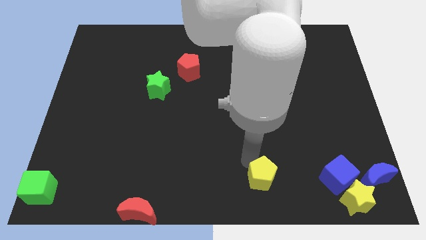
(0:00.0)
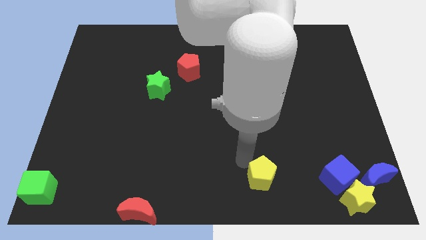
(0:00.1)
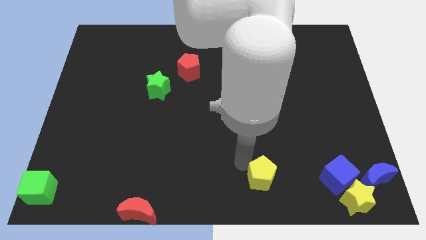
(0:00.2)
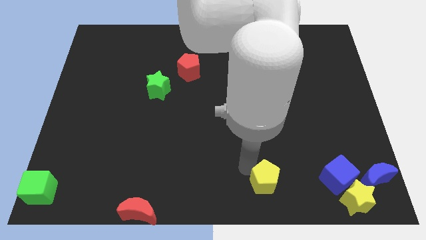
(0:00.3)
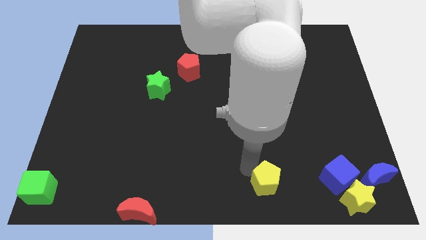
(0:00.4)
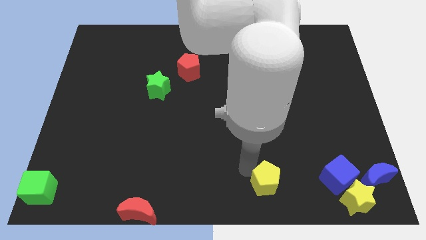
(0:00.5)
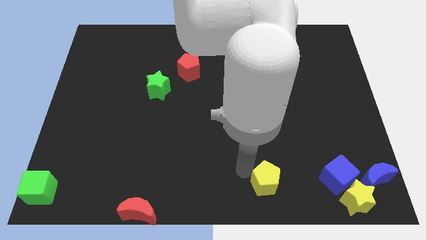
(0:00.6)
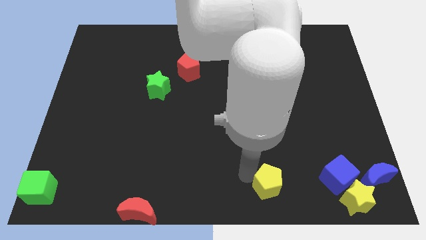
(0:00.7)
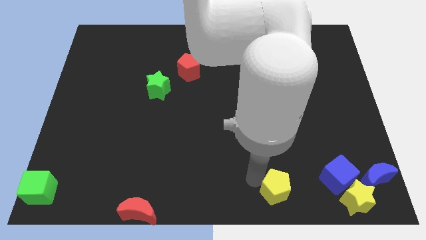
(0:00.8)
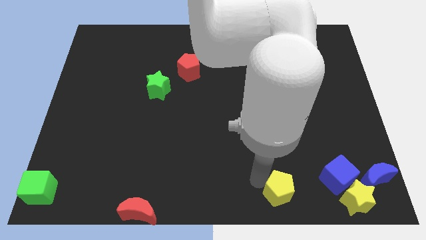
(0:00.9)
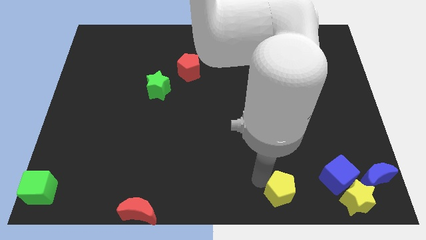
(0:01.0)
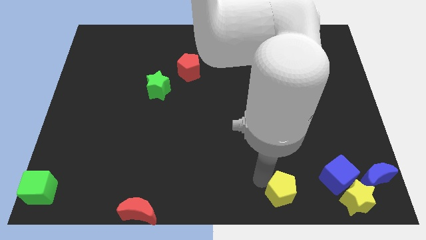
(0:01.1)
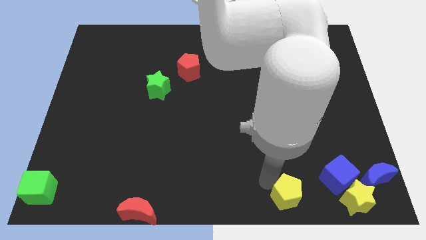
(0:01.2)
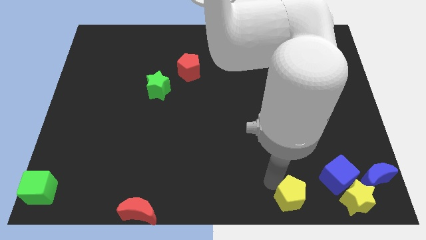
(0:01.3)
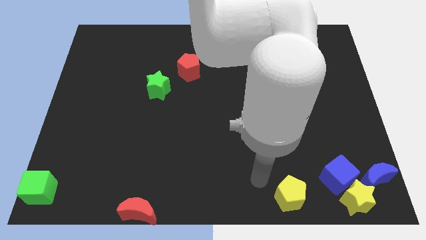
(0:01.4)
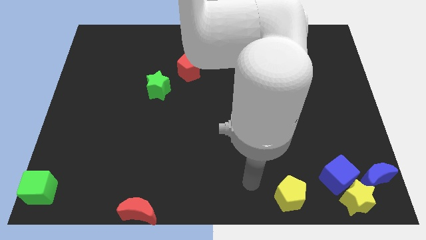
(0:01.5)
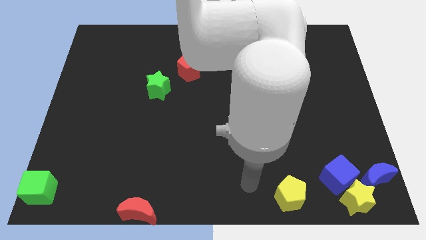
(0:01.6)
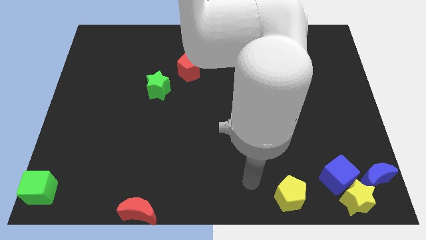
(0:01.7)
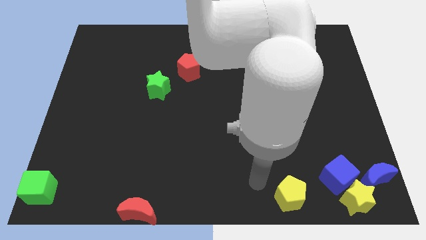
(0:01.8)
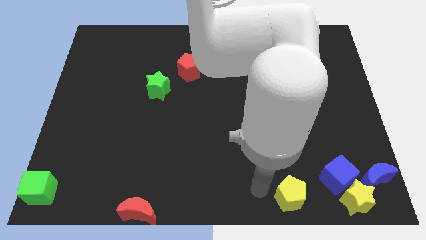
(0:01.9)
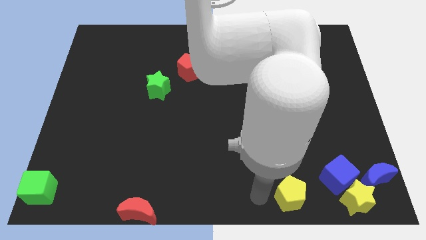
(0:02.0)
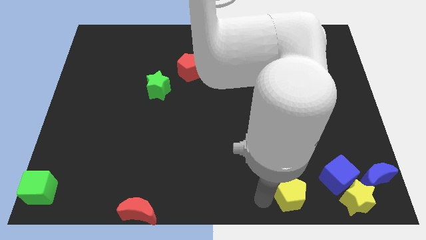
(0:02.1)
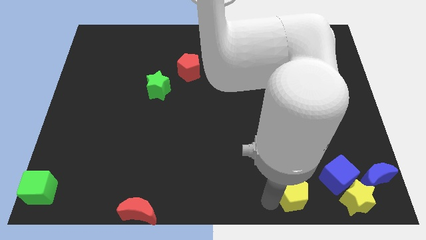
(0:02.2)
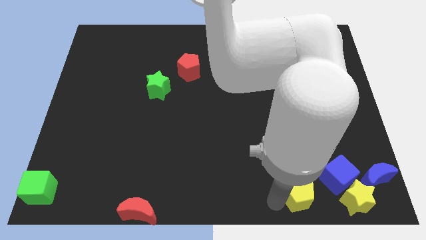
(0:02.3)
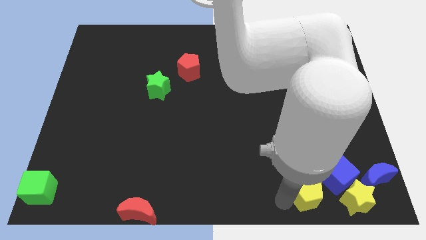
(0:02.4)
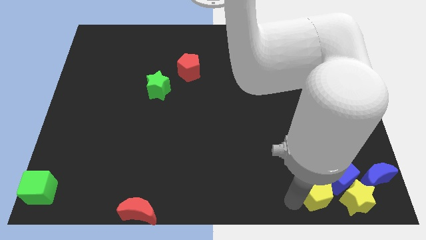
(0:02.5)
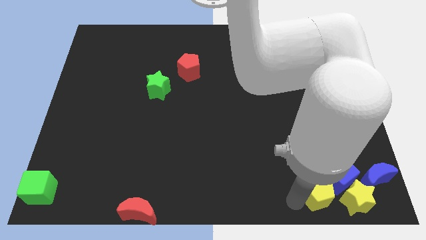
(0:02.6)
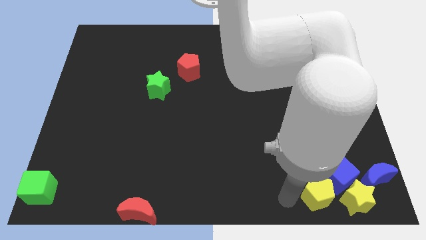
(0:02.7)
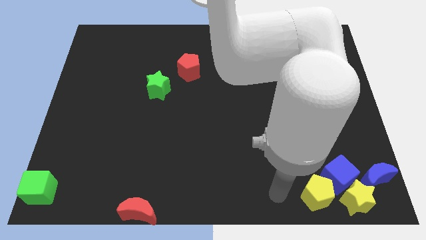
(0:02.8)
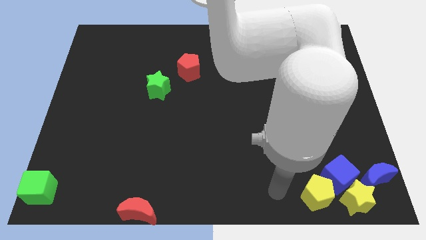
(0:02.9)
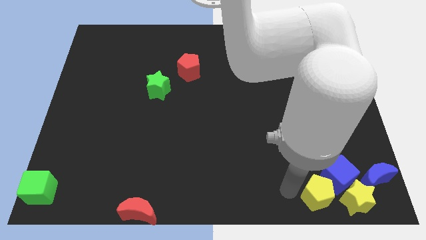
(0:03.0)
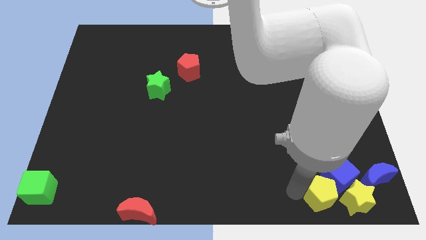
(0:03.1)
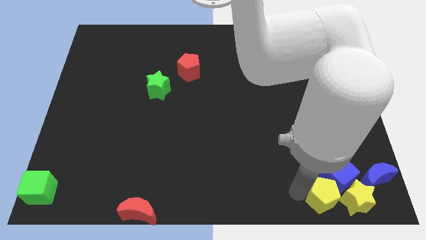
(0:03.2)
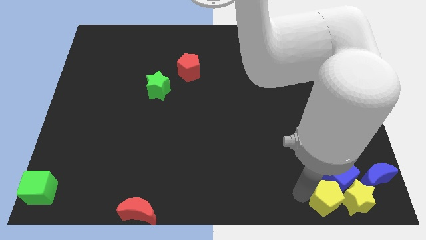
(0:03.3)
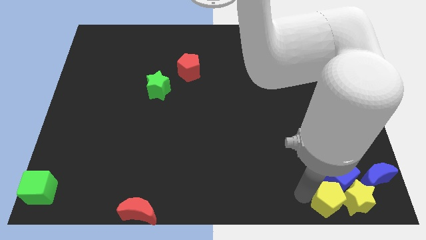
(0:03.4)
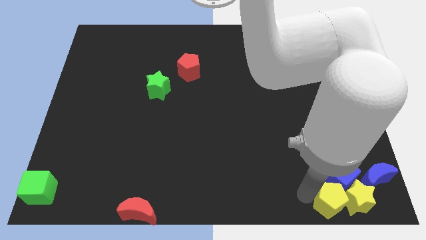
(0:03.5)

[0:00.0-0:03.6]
move yellow pentagon to bottom right

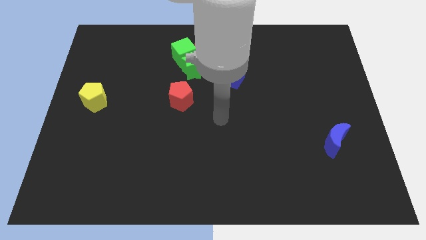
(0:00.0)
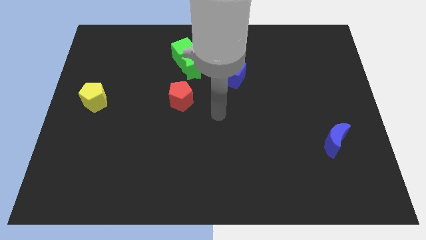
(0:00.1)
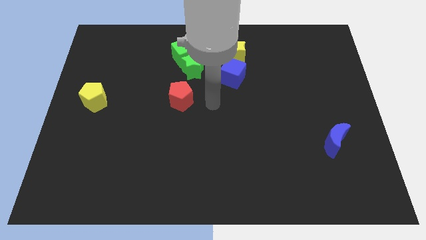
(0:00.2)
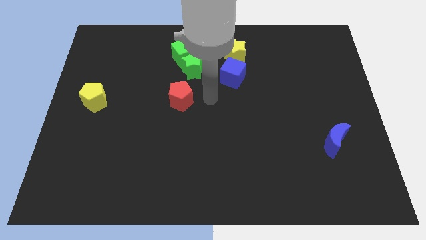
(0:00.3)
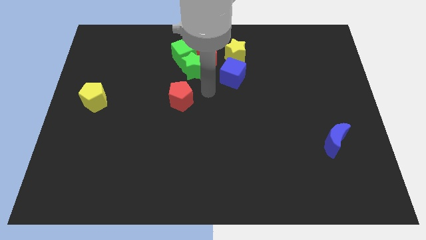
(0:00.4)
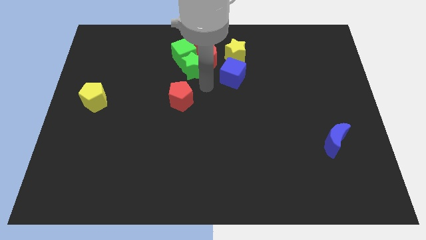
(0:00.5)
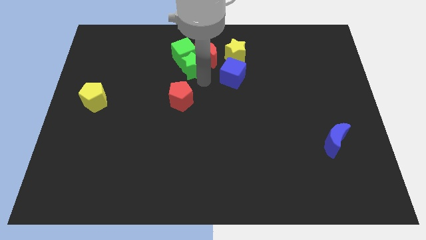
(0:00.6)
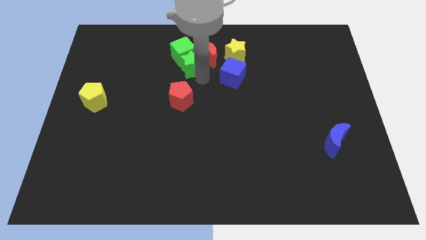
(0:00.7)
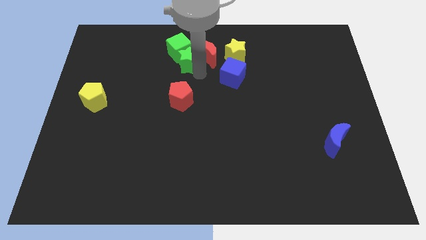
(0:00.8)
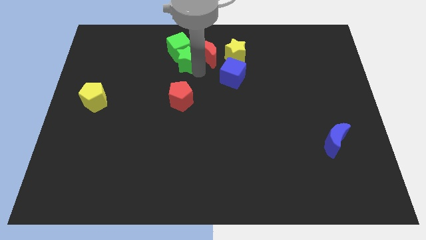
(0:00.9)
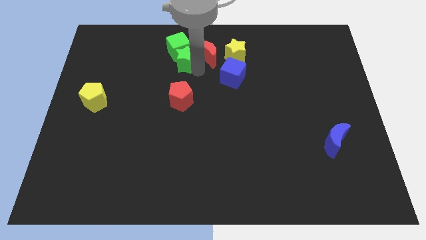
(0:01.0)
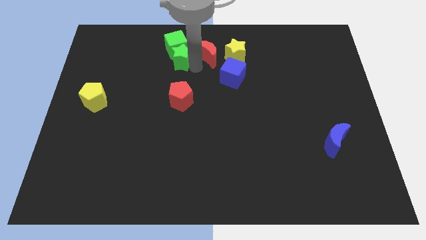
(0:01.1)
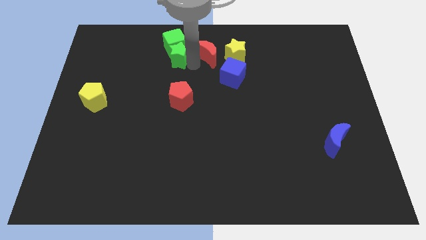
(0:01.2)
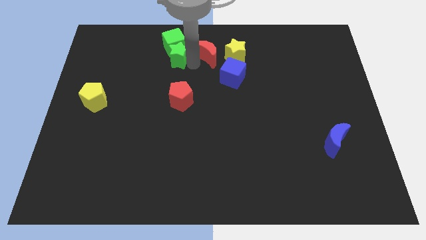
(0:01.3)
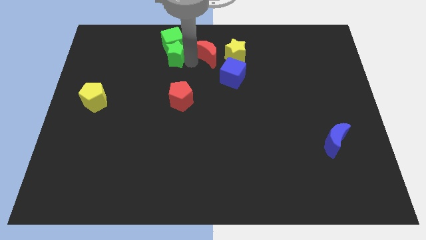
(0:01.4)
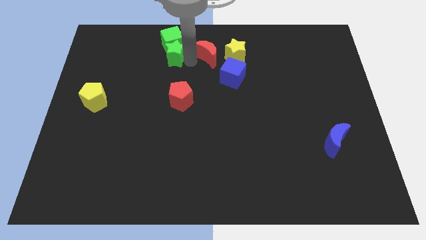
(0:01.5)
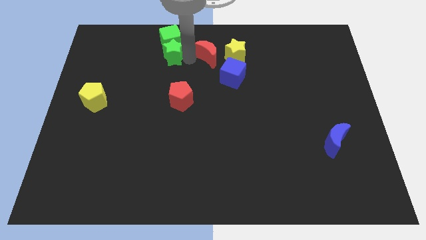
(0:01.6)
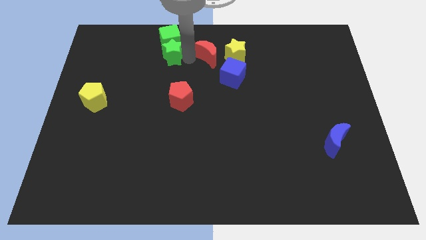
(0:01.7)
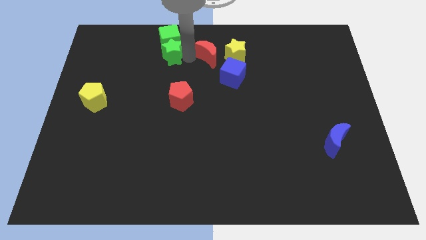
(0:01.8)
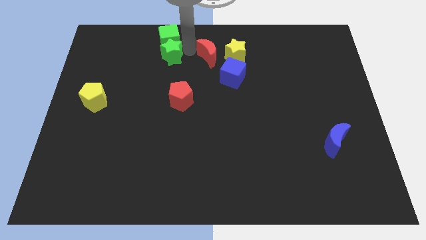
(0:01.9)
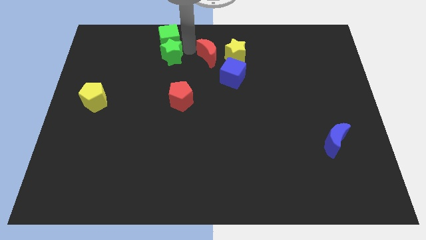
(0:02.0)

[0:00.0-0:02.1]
move both green star and green cube to the top of the board

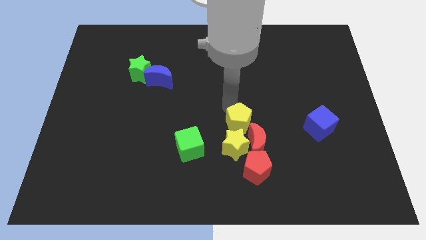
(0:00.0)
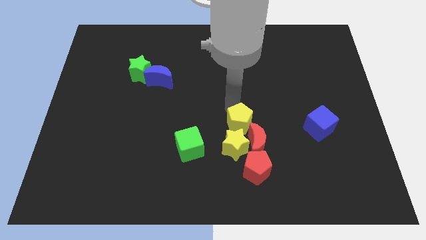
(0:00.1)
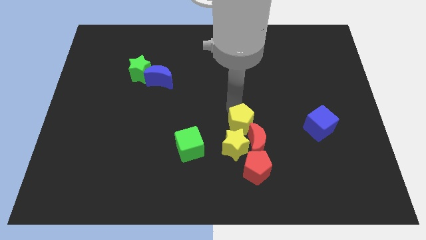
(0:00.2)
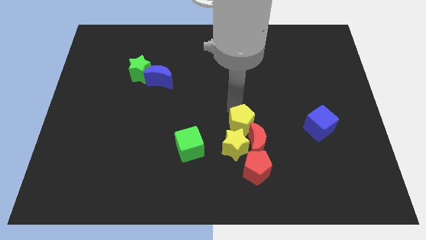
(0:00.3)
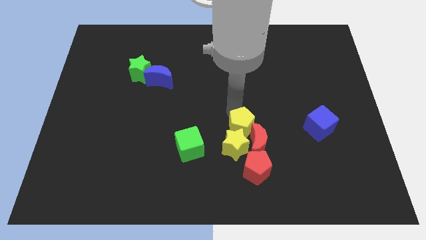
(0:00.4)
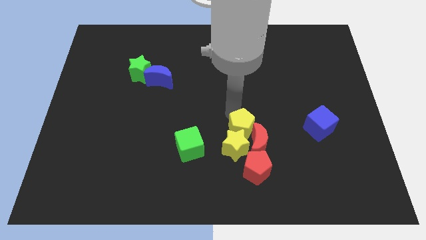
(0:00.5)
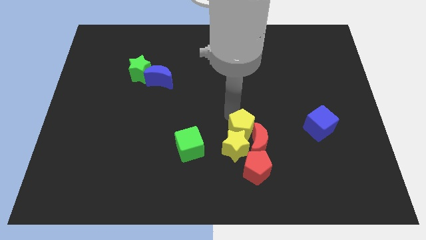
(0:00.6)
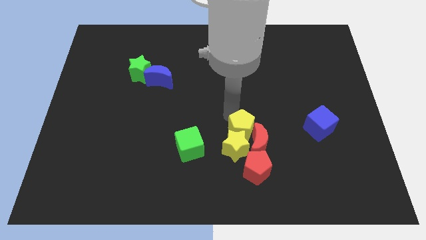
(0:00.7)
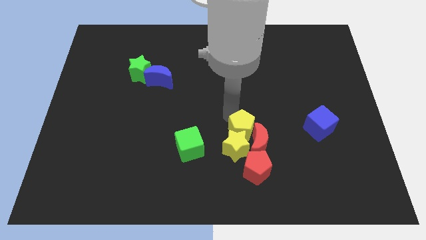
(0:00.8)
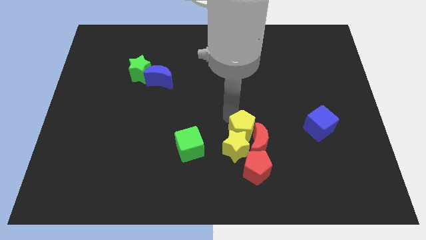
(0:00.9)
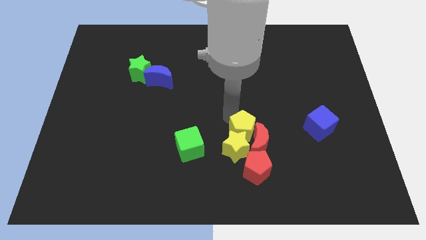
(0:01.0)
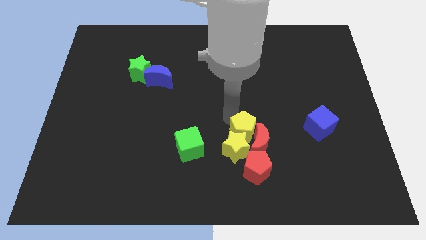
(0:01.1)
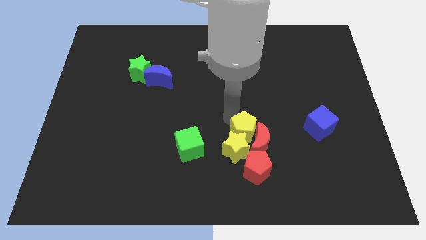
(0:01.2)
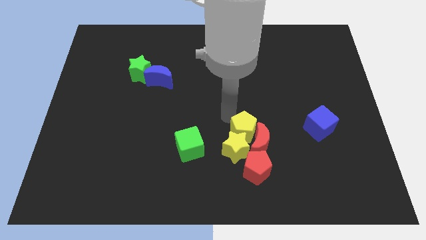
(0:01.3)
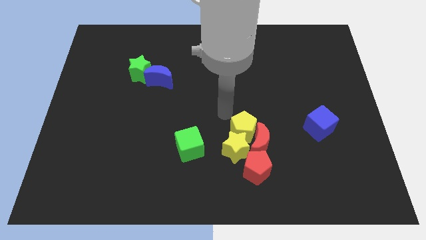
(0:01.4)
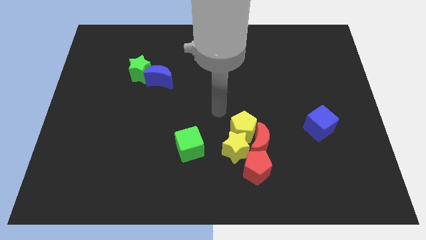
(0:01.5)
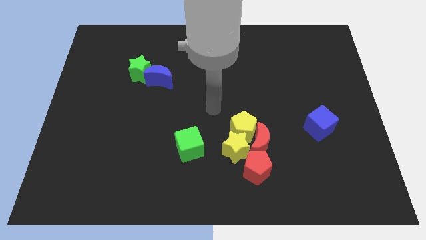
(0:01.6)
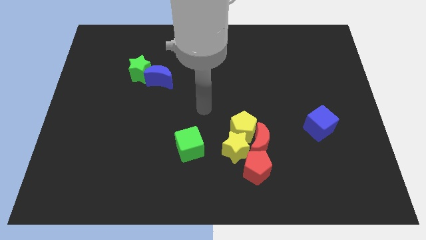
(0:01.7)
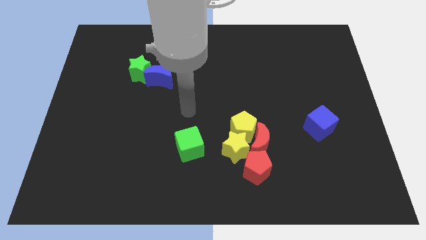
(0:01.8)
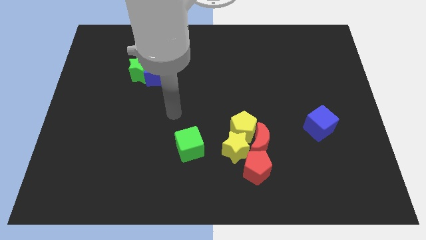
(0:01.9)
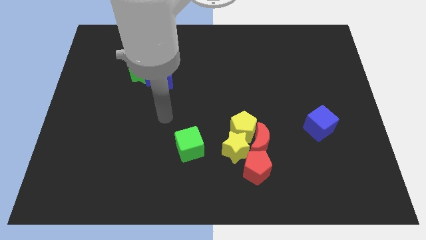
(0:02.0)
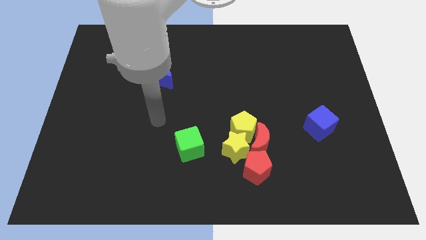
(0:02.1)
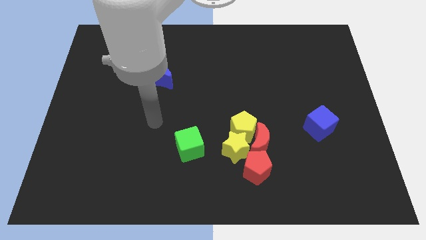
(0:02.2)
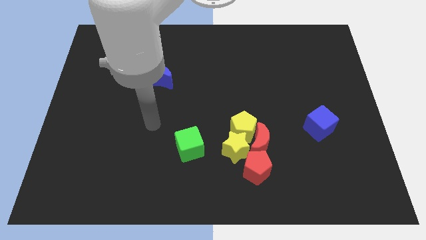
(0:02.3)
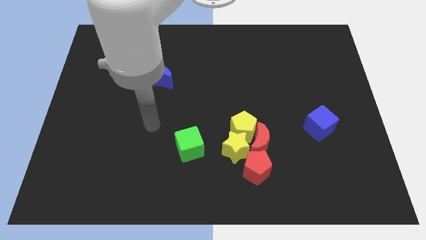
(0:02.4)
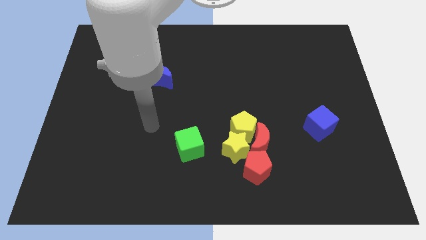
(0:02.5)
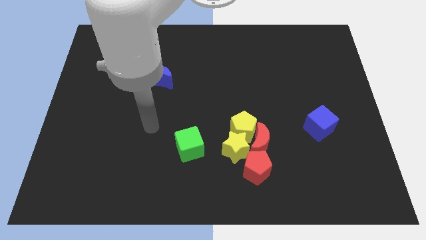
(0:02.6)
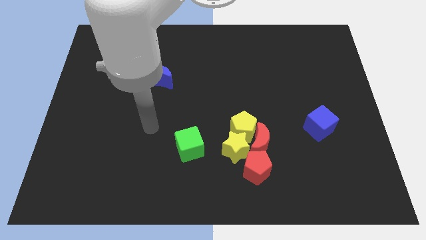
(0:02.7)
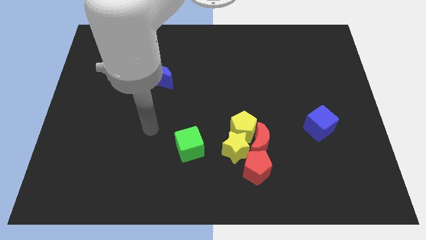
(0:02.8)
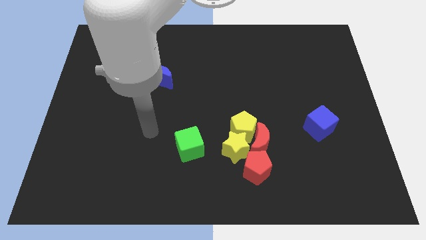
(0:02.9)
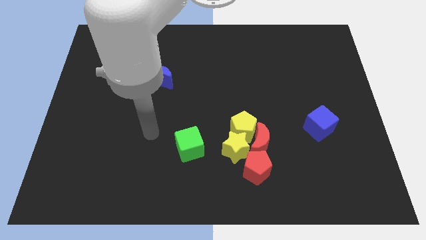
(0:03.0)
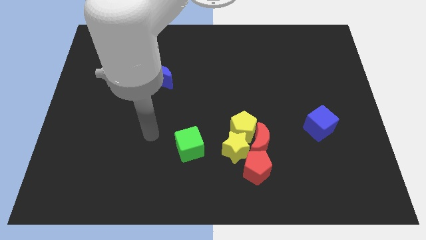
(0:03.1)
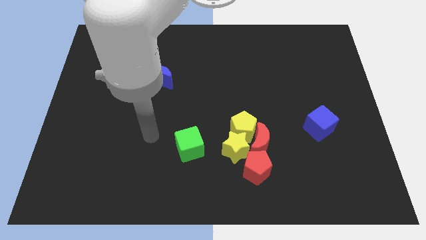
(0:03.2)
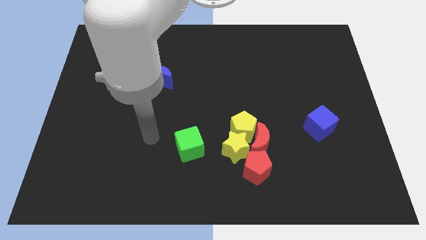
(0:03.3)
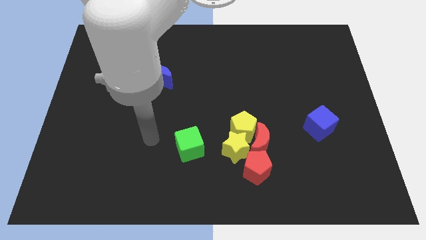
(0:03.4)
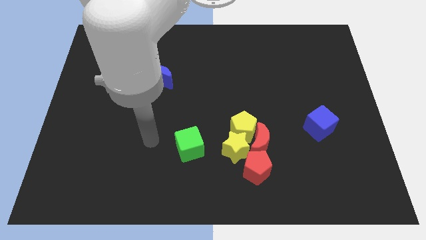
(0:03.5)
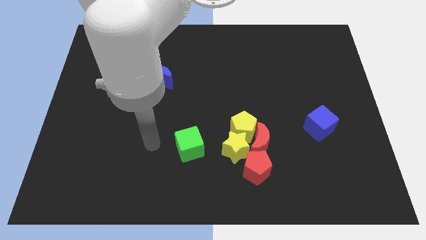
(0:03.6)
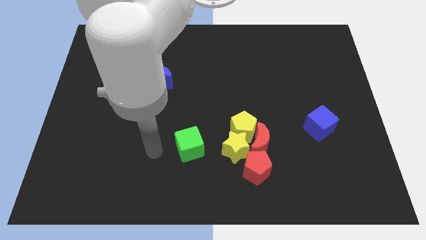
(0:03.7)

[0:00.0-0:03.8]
move the yellow pentagon slightly to the left of red moon
